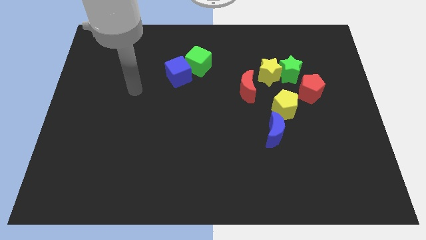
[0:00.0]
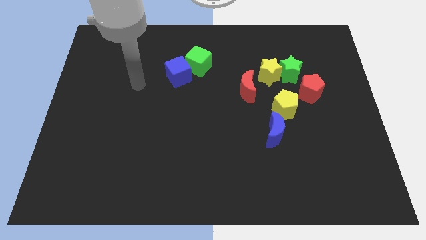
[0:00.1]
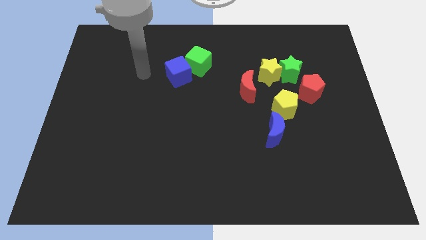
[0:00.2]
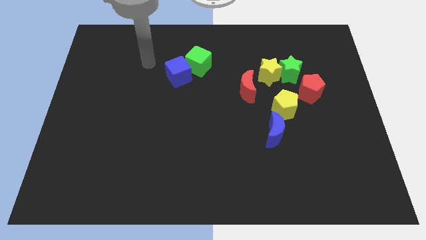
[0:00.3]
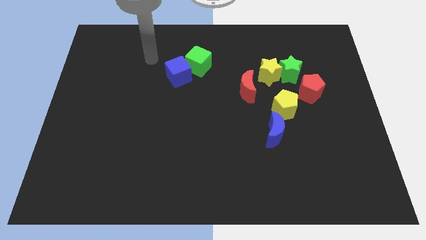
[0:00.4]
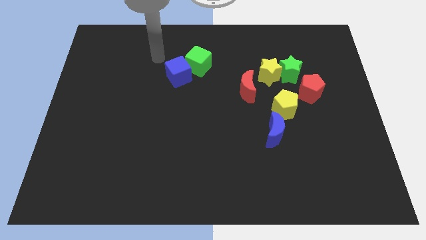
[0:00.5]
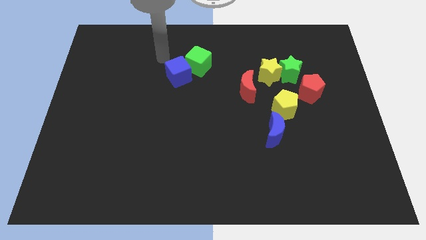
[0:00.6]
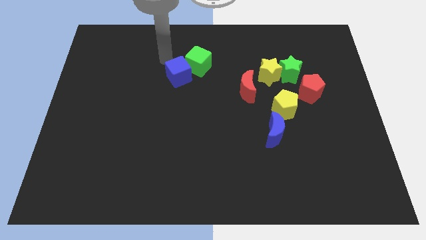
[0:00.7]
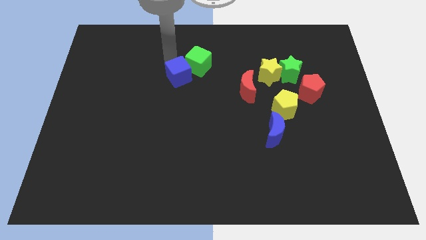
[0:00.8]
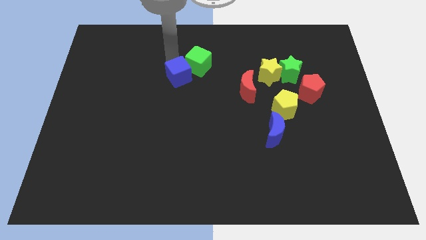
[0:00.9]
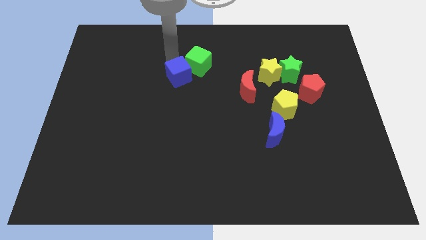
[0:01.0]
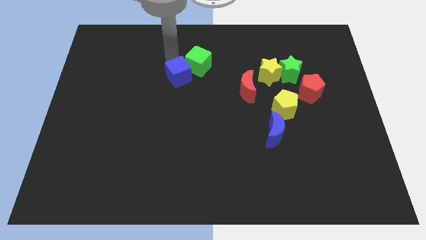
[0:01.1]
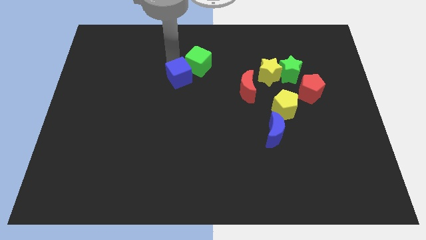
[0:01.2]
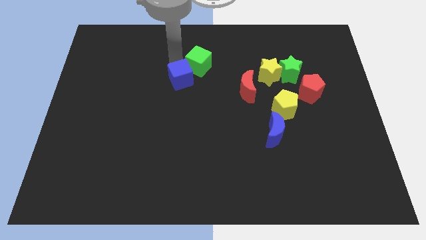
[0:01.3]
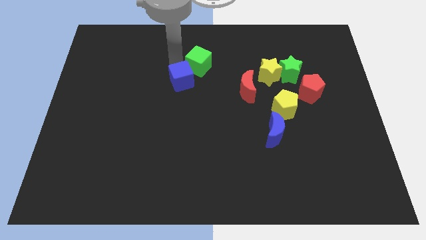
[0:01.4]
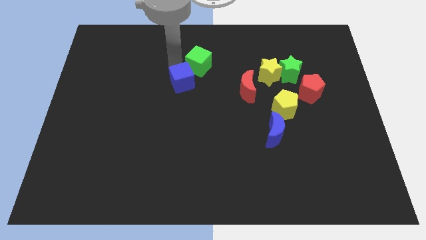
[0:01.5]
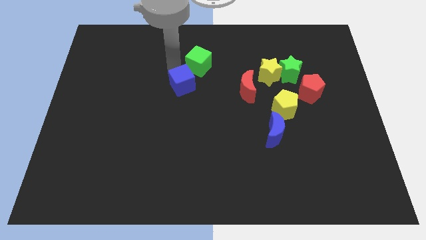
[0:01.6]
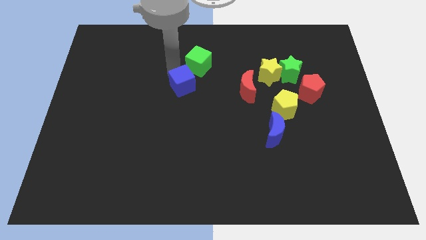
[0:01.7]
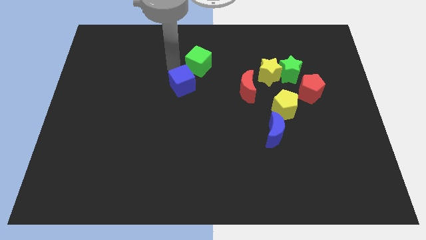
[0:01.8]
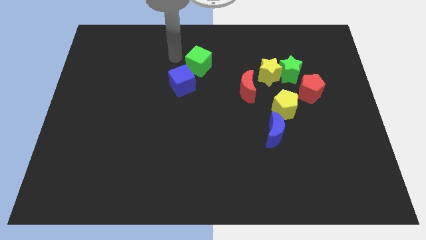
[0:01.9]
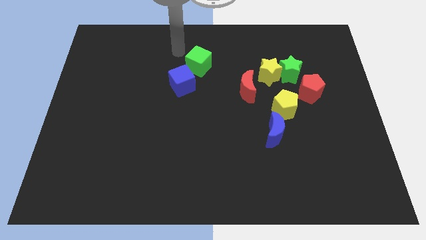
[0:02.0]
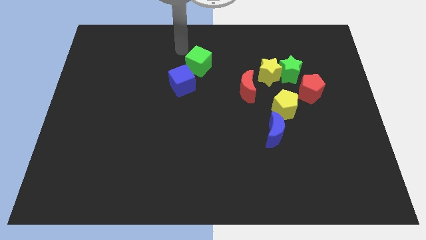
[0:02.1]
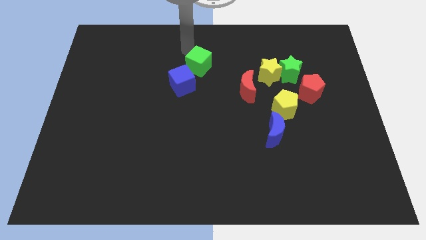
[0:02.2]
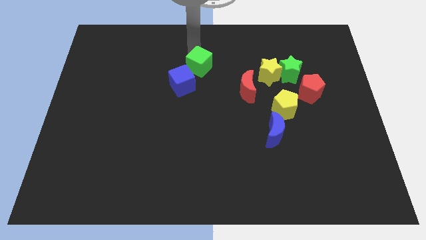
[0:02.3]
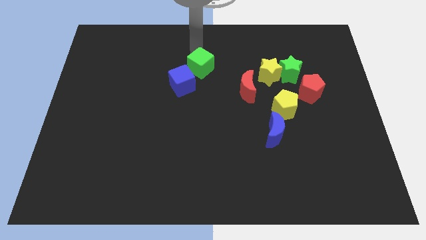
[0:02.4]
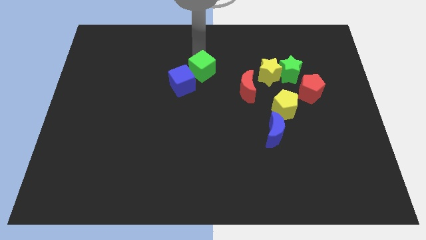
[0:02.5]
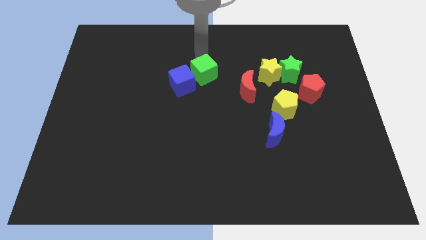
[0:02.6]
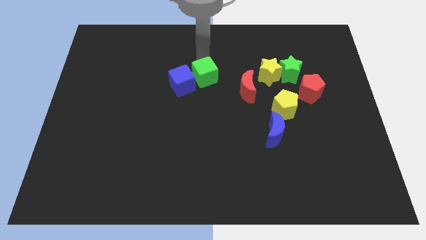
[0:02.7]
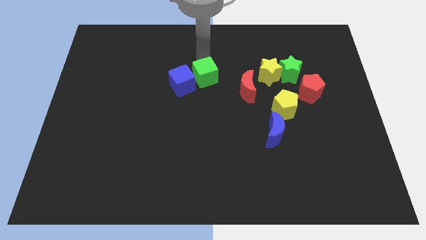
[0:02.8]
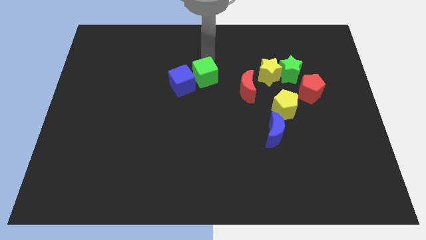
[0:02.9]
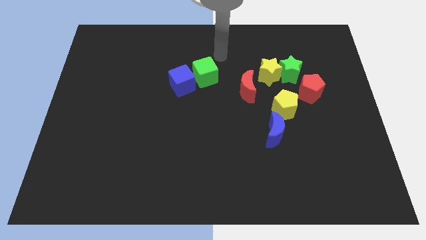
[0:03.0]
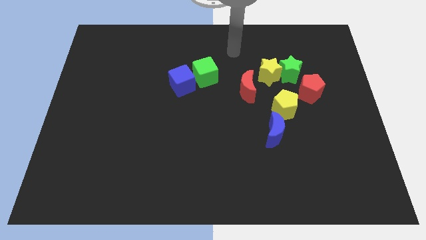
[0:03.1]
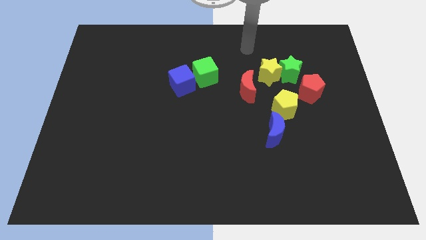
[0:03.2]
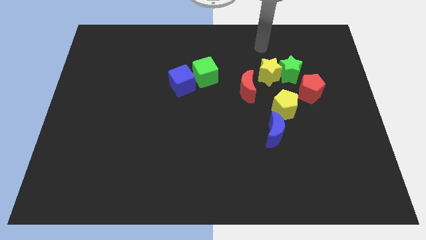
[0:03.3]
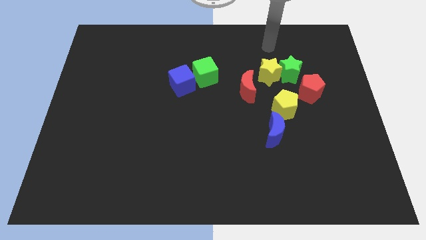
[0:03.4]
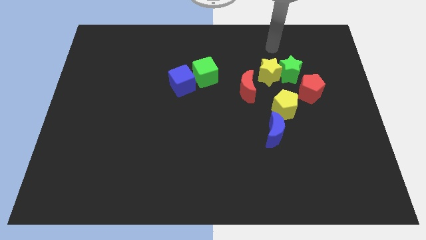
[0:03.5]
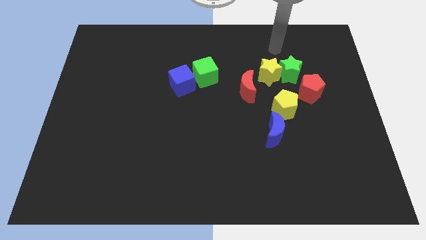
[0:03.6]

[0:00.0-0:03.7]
push the blue cube and green cube to center of the board

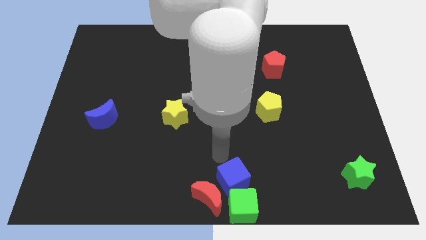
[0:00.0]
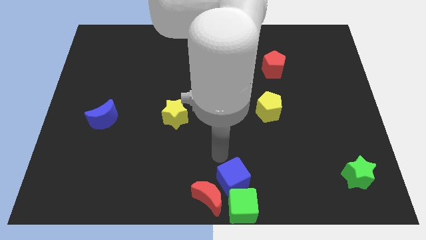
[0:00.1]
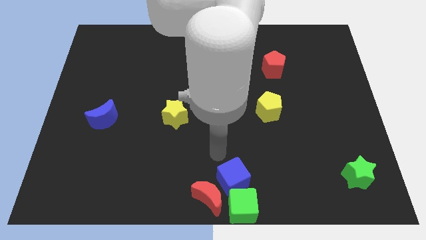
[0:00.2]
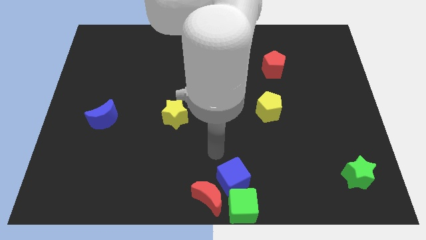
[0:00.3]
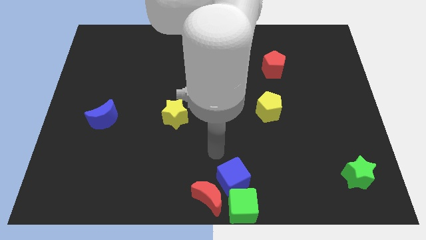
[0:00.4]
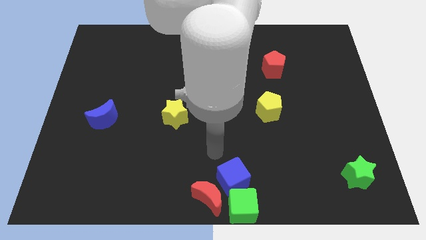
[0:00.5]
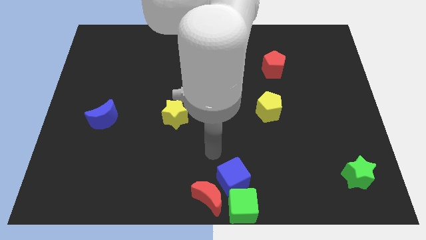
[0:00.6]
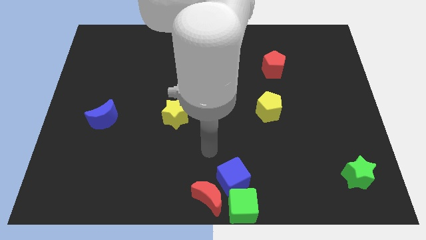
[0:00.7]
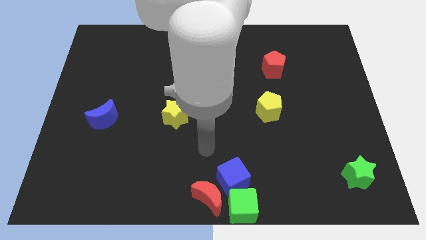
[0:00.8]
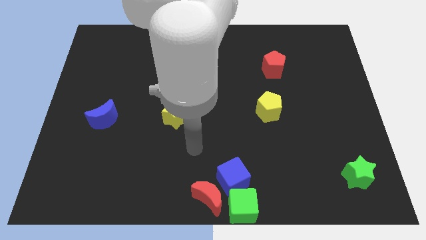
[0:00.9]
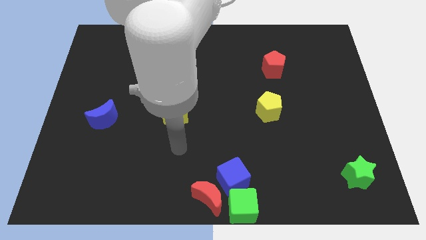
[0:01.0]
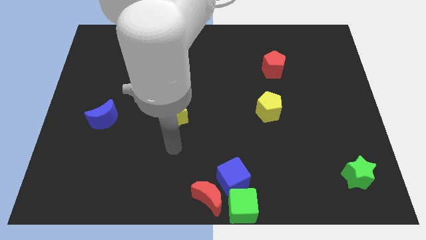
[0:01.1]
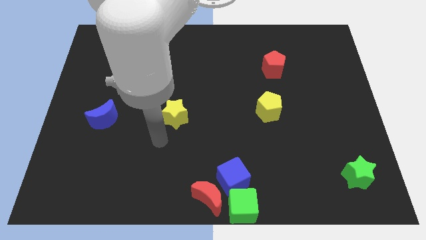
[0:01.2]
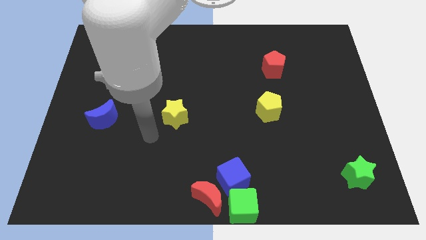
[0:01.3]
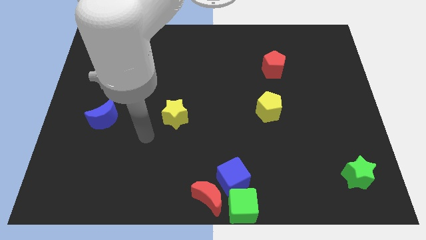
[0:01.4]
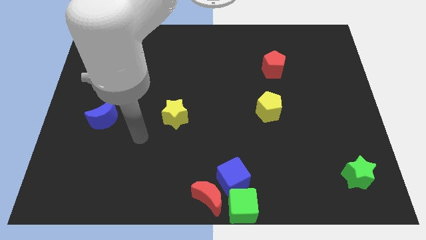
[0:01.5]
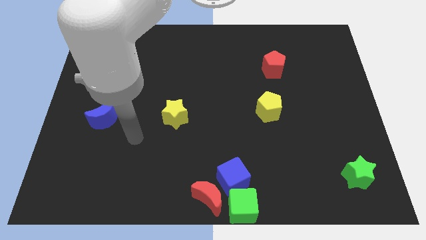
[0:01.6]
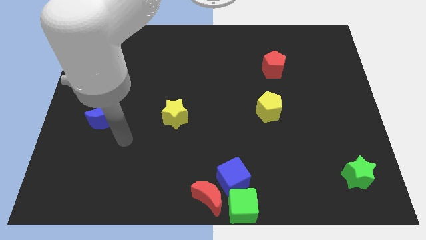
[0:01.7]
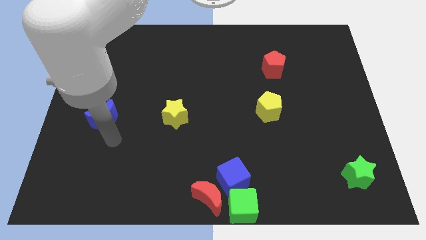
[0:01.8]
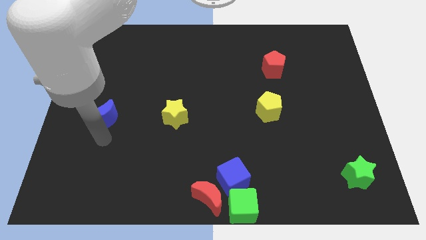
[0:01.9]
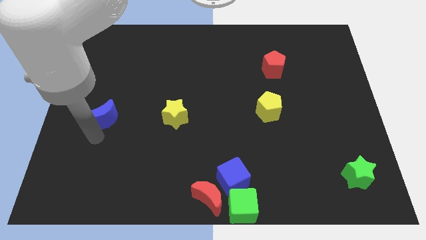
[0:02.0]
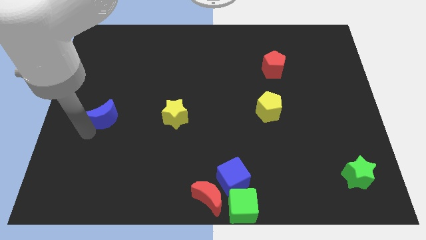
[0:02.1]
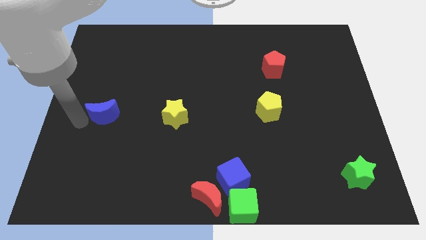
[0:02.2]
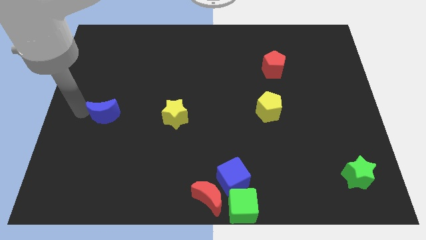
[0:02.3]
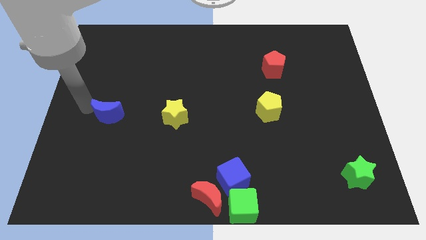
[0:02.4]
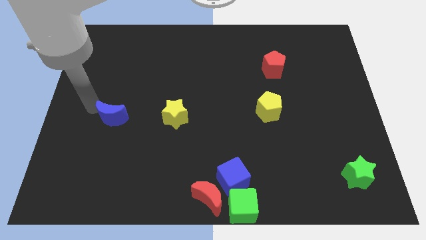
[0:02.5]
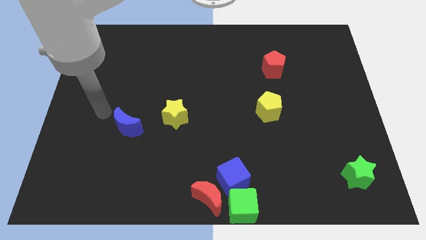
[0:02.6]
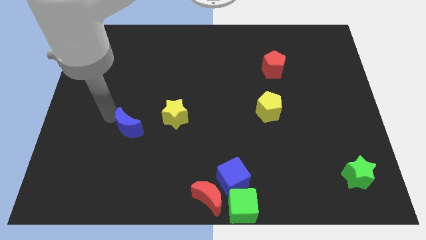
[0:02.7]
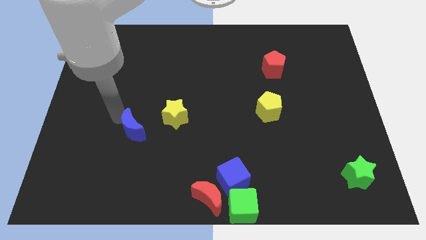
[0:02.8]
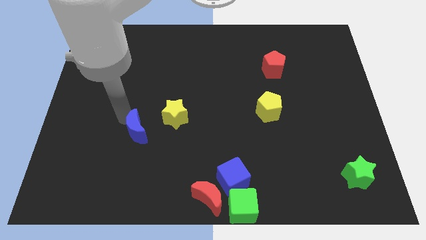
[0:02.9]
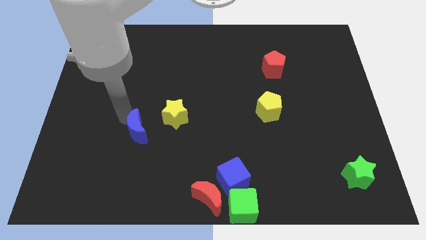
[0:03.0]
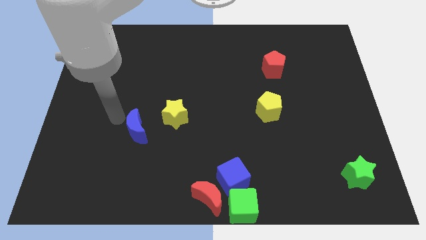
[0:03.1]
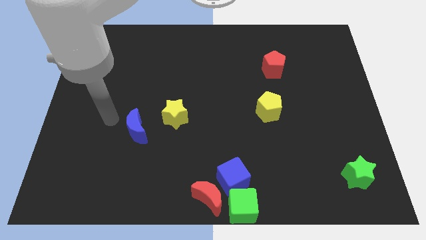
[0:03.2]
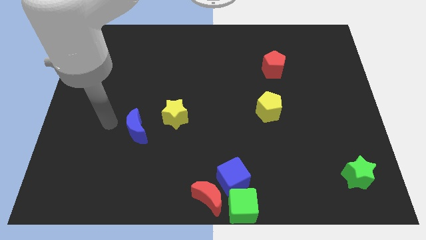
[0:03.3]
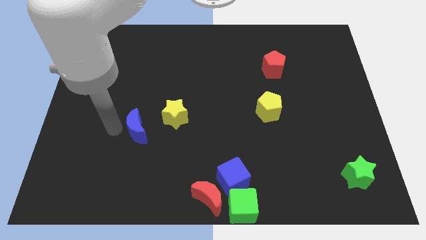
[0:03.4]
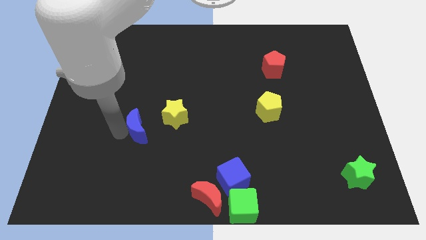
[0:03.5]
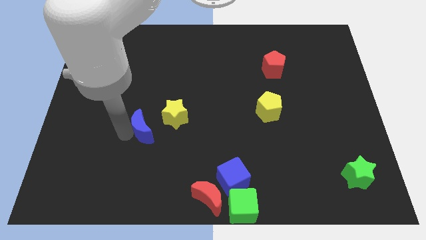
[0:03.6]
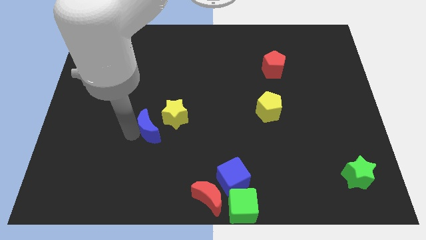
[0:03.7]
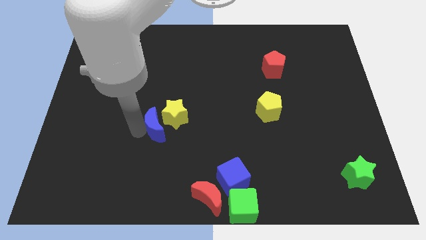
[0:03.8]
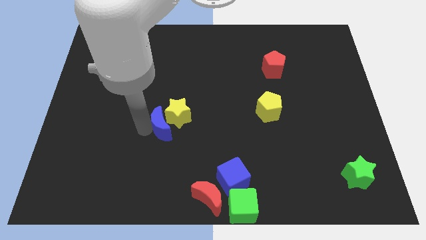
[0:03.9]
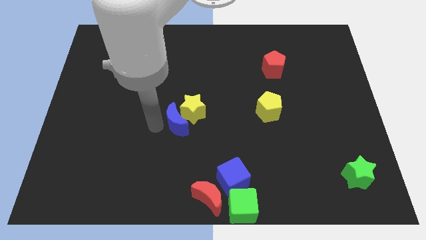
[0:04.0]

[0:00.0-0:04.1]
move the blue crescent into the yellow star

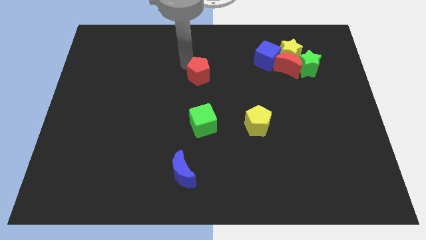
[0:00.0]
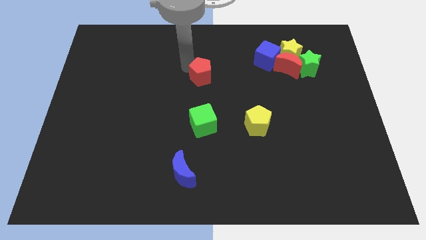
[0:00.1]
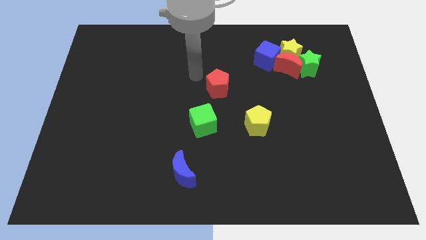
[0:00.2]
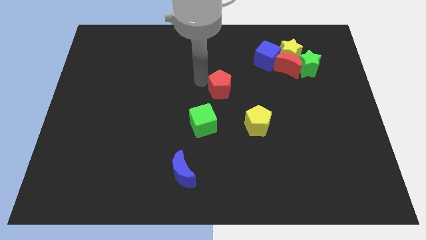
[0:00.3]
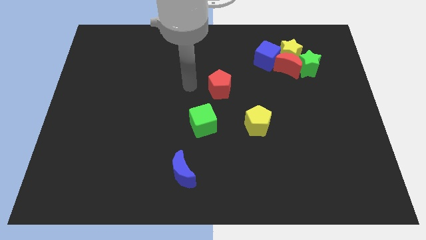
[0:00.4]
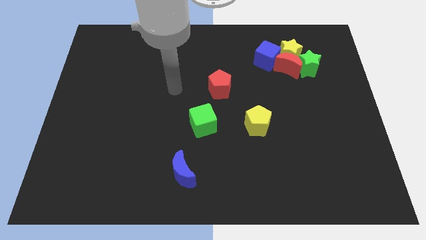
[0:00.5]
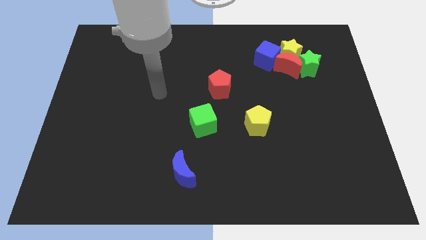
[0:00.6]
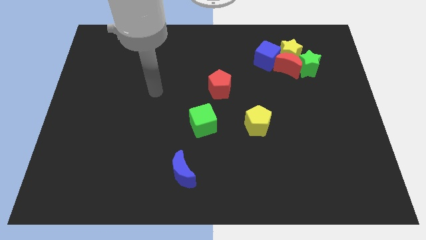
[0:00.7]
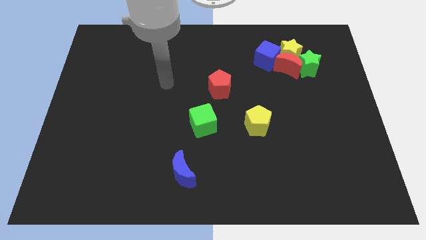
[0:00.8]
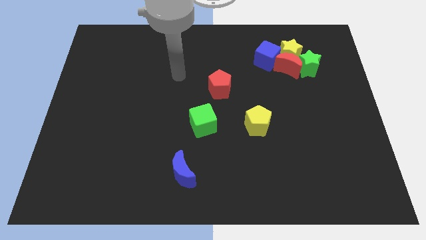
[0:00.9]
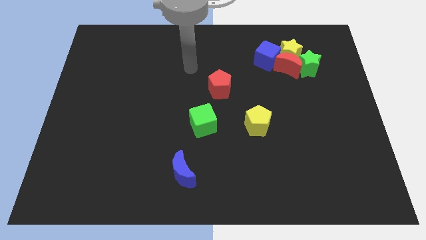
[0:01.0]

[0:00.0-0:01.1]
move the red pentagon downwards
